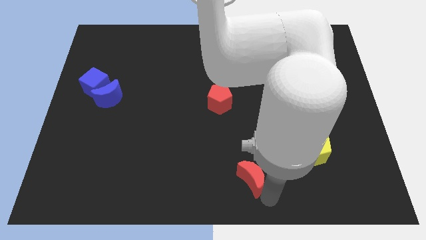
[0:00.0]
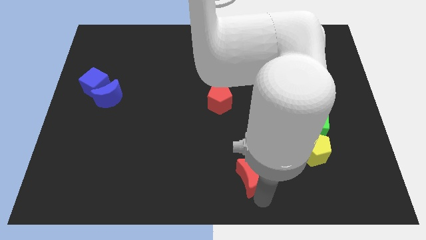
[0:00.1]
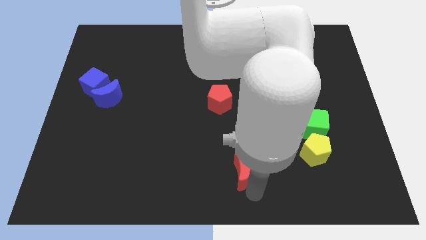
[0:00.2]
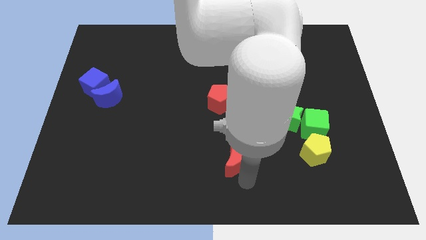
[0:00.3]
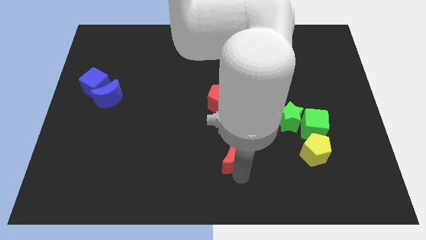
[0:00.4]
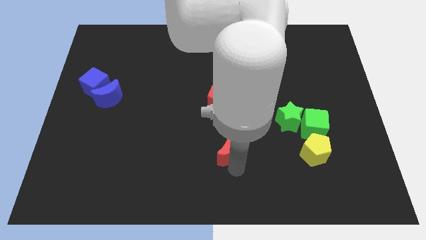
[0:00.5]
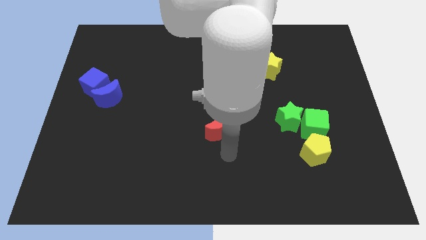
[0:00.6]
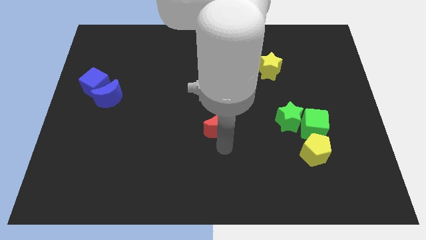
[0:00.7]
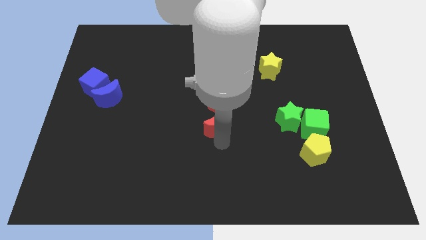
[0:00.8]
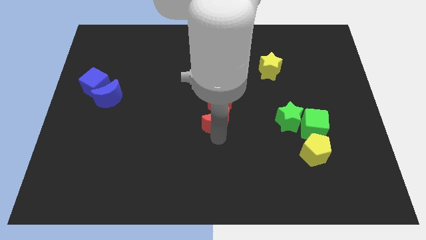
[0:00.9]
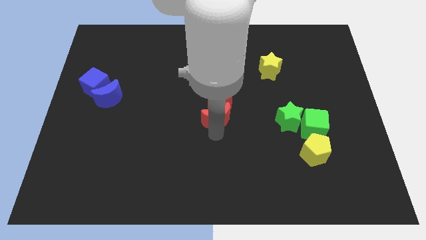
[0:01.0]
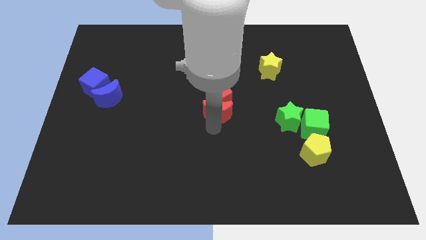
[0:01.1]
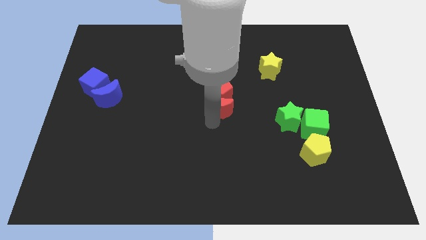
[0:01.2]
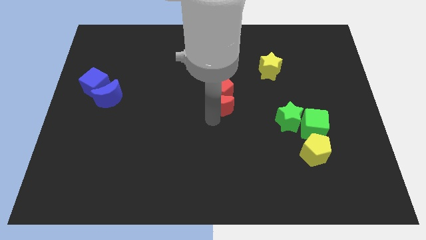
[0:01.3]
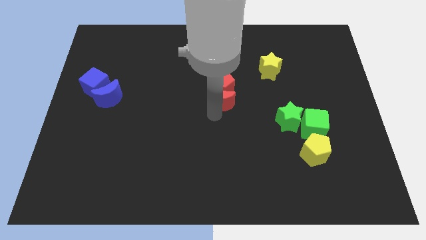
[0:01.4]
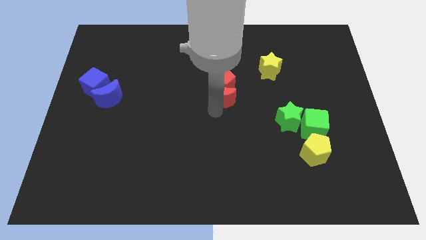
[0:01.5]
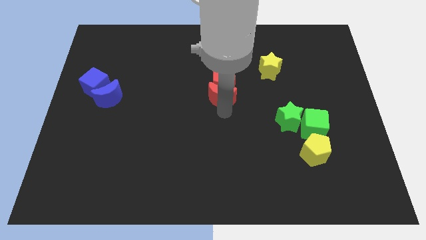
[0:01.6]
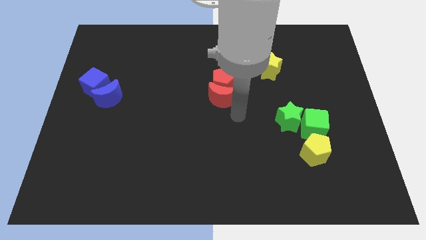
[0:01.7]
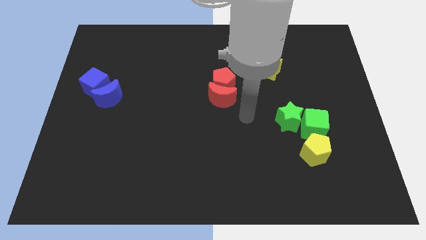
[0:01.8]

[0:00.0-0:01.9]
push the red crescent into the red pentagon to the top center

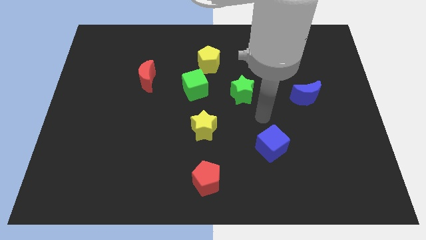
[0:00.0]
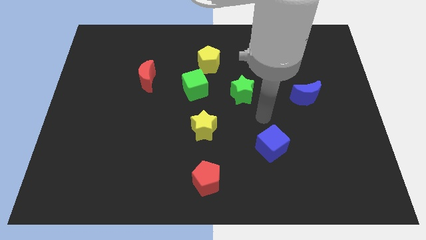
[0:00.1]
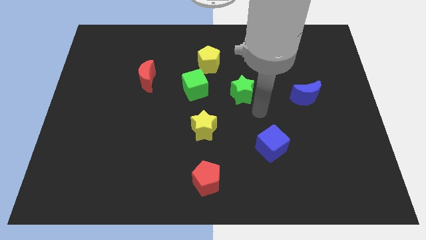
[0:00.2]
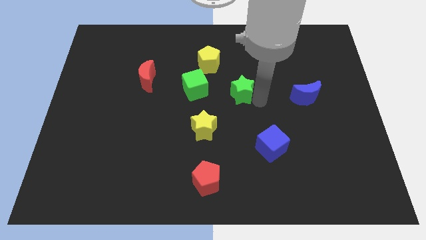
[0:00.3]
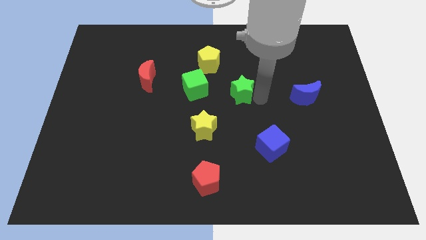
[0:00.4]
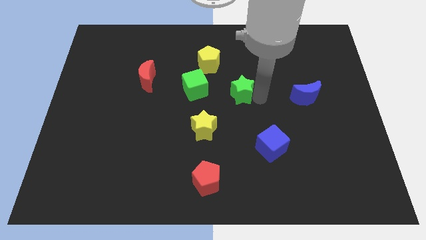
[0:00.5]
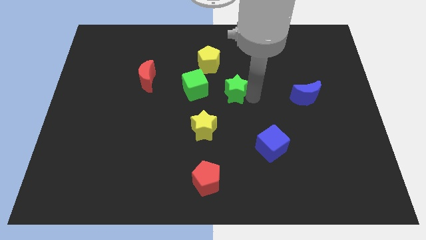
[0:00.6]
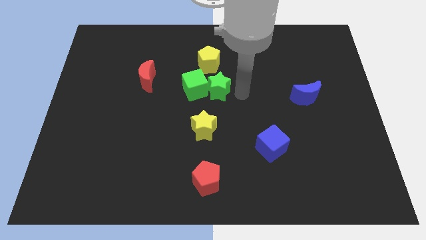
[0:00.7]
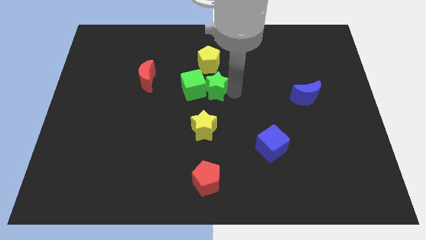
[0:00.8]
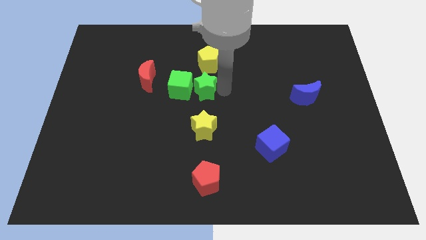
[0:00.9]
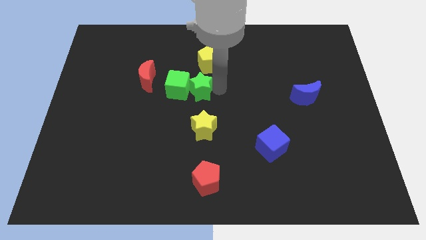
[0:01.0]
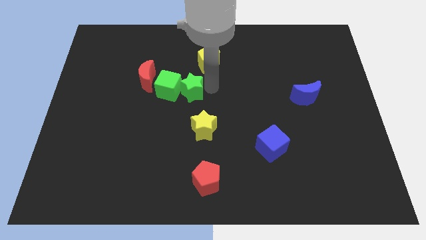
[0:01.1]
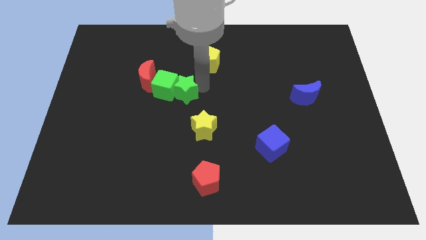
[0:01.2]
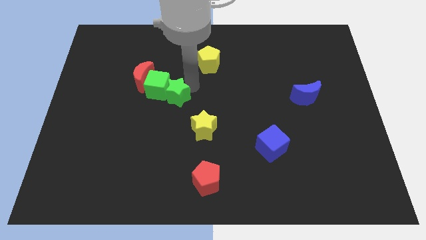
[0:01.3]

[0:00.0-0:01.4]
push the green star into green cube

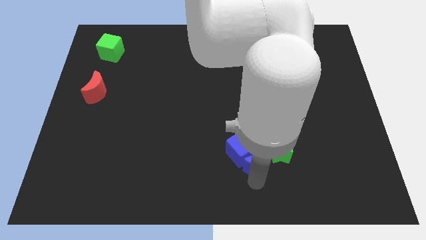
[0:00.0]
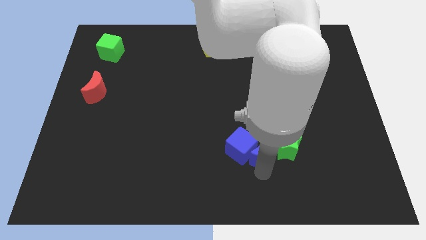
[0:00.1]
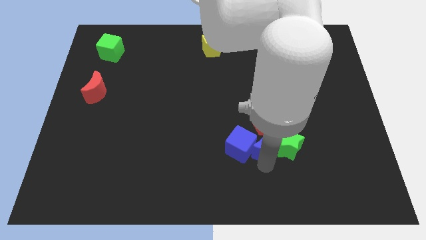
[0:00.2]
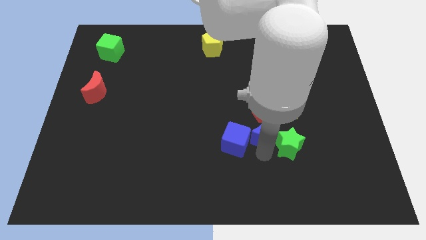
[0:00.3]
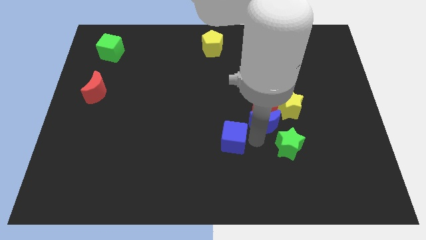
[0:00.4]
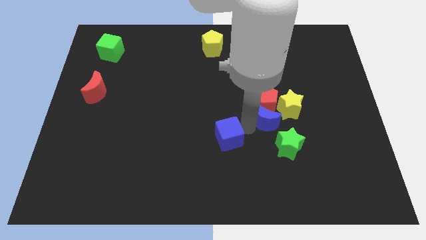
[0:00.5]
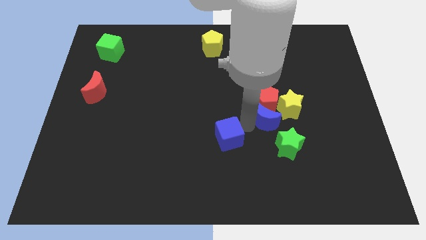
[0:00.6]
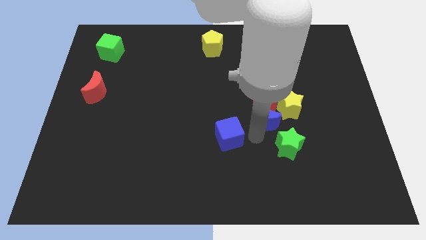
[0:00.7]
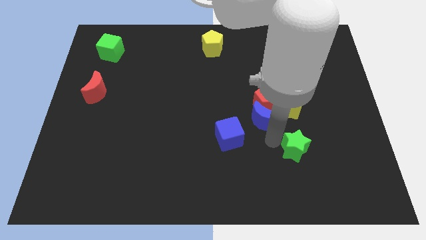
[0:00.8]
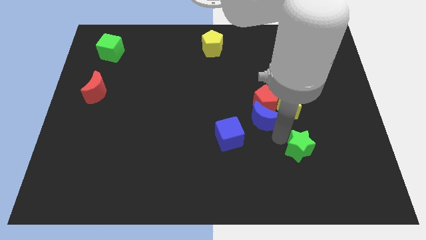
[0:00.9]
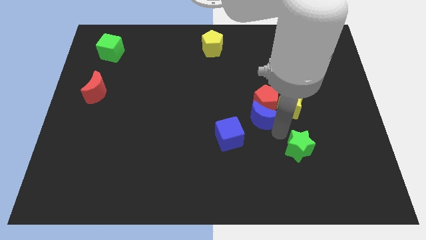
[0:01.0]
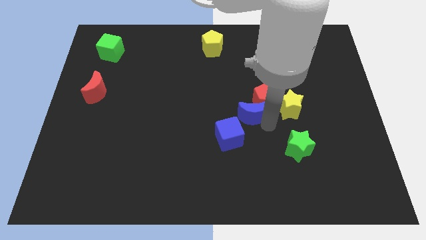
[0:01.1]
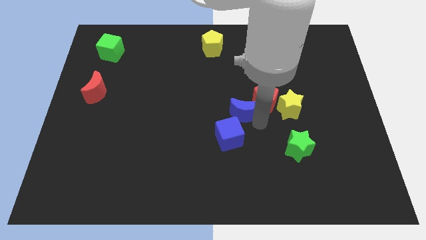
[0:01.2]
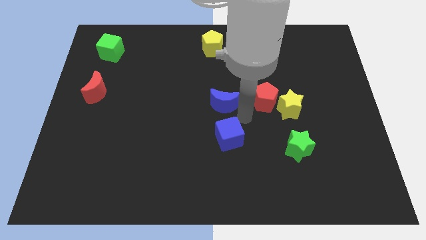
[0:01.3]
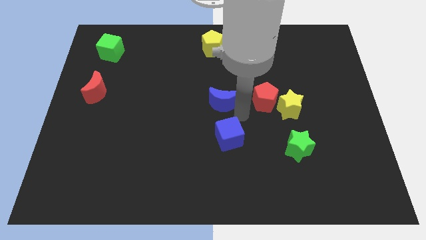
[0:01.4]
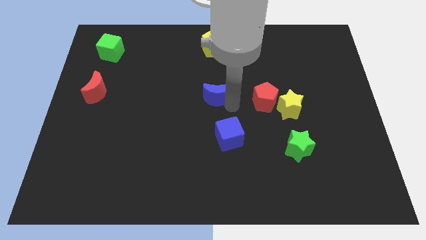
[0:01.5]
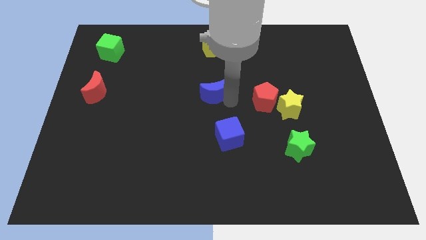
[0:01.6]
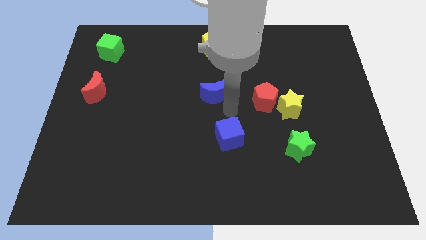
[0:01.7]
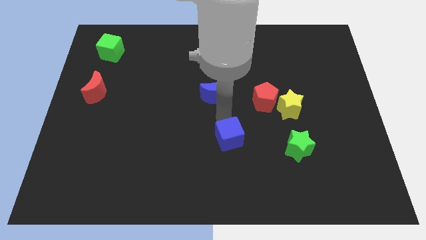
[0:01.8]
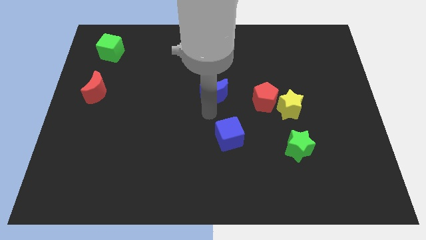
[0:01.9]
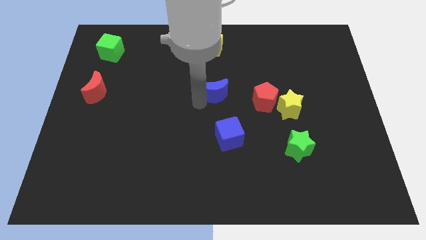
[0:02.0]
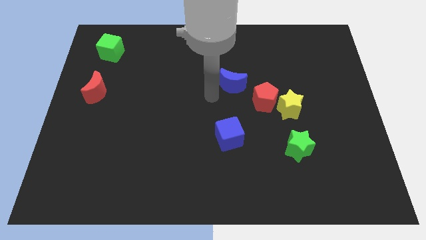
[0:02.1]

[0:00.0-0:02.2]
push blue moon towards top

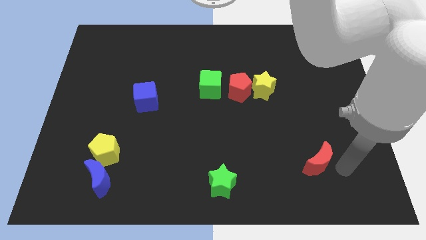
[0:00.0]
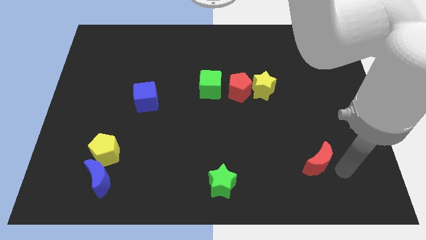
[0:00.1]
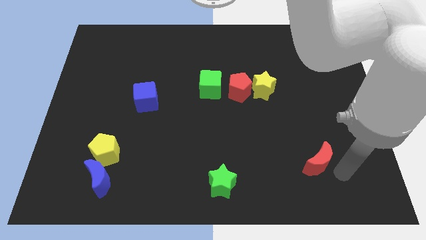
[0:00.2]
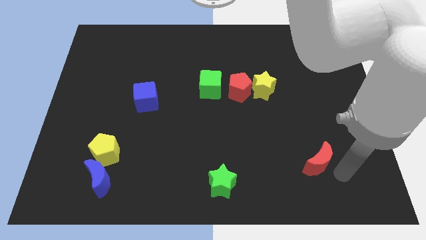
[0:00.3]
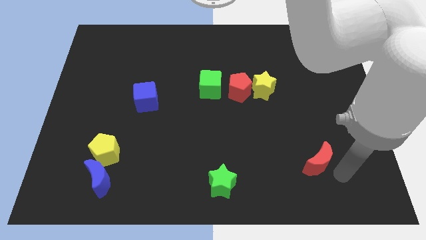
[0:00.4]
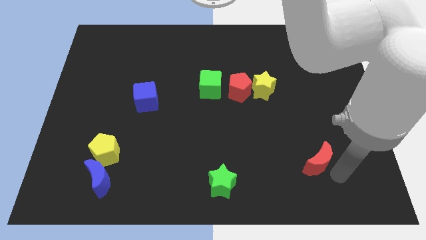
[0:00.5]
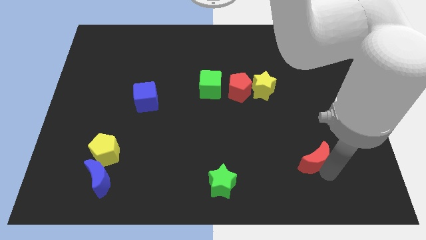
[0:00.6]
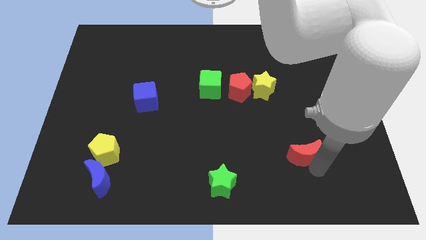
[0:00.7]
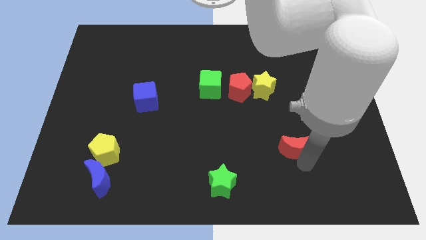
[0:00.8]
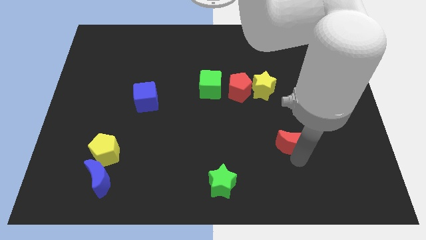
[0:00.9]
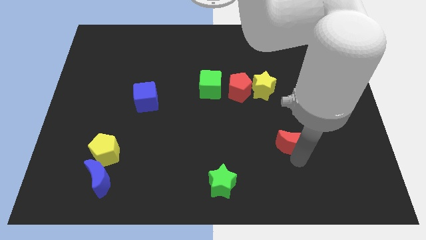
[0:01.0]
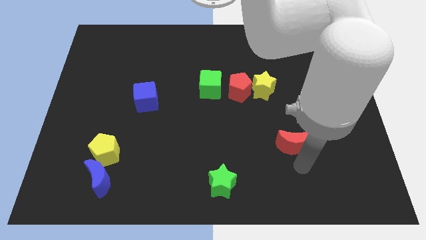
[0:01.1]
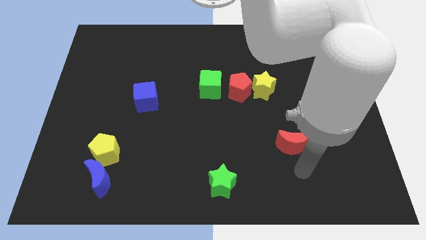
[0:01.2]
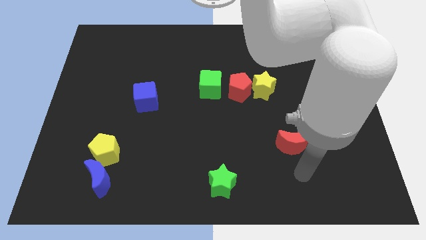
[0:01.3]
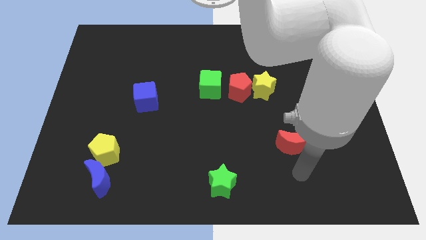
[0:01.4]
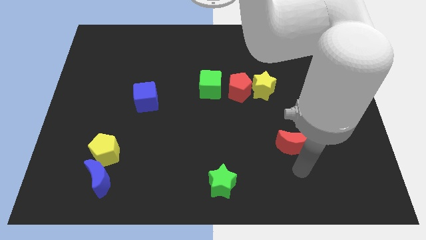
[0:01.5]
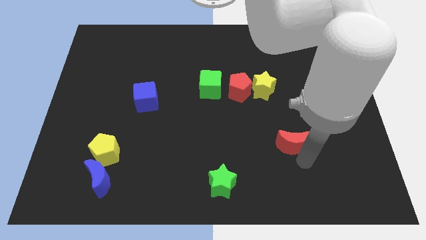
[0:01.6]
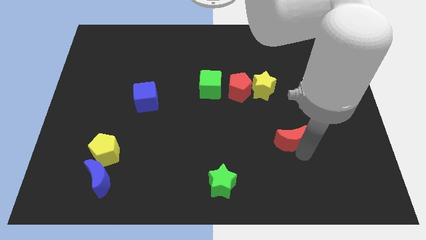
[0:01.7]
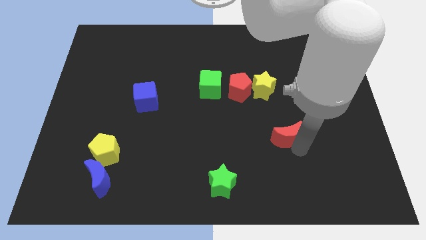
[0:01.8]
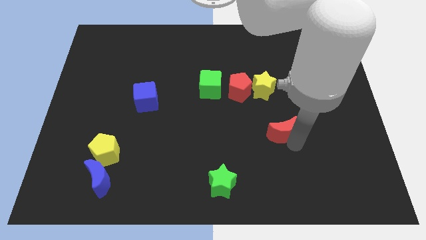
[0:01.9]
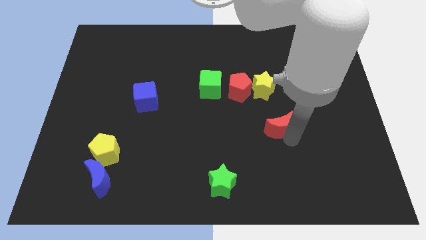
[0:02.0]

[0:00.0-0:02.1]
push the red crescent towards the center of the board

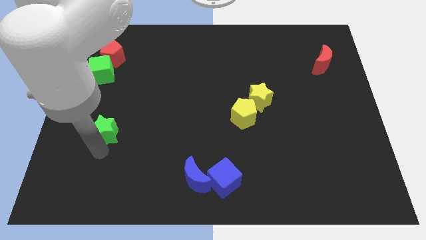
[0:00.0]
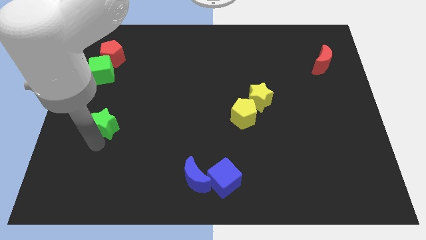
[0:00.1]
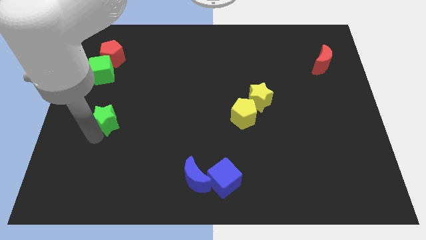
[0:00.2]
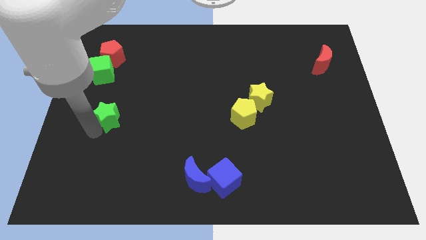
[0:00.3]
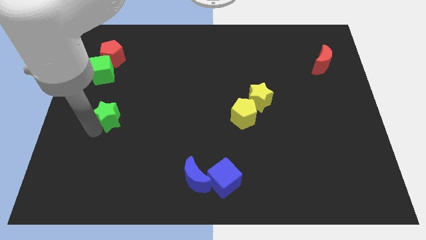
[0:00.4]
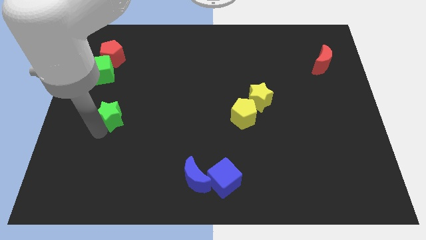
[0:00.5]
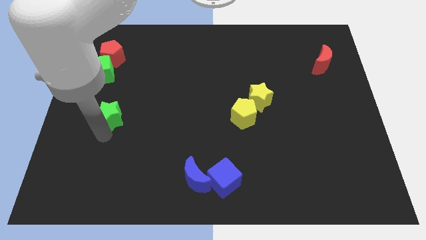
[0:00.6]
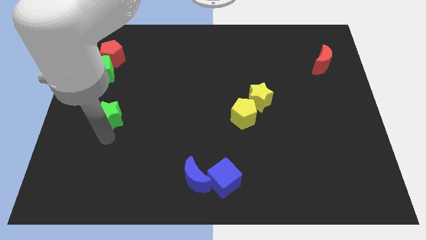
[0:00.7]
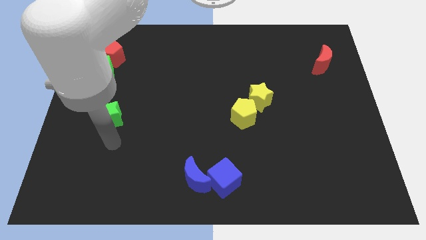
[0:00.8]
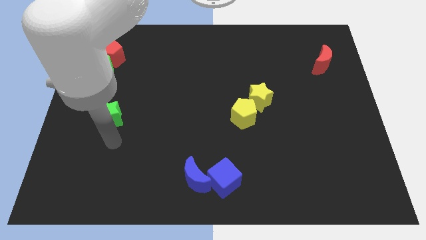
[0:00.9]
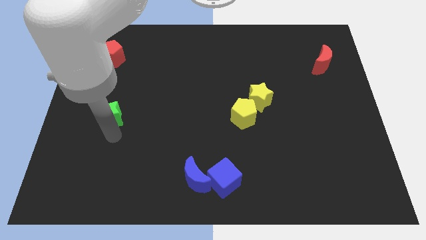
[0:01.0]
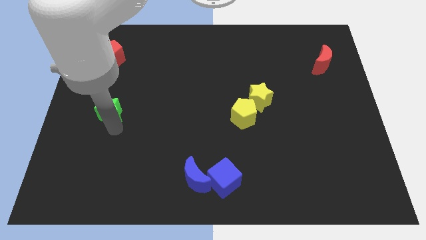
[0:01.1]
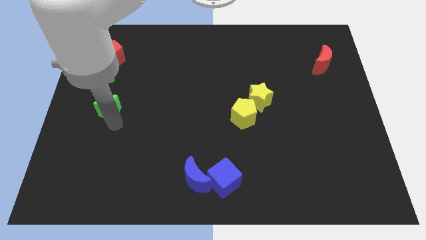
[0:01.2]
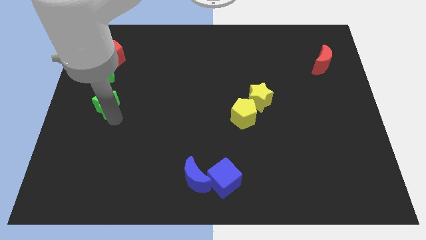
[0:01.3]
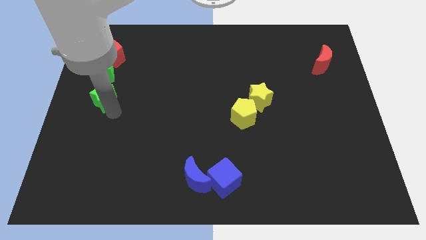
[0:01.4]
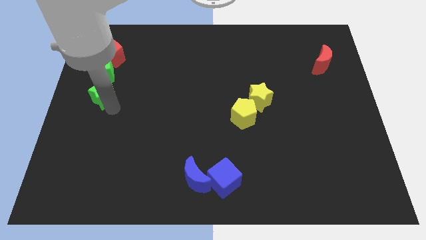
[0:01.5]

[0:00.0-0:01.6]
push the green star towards green cube
